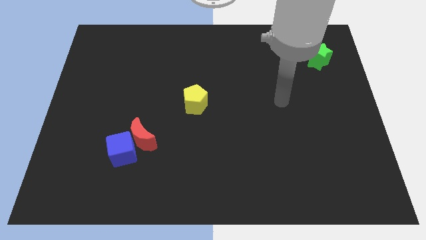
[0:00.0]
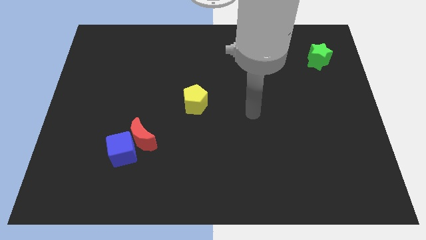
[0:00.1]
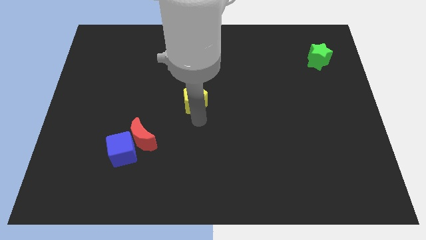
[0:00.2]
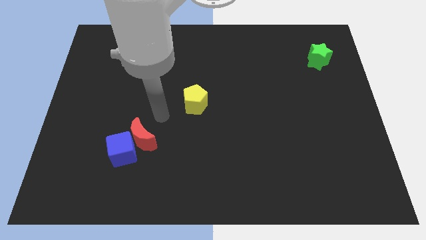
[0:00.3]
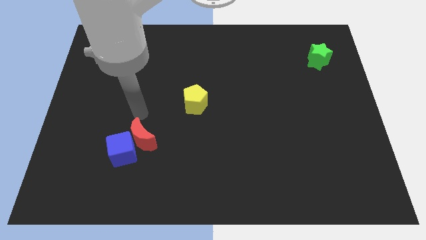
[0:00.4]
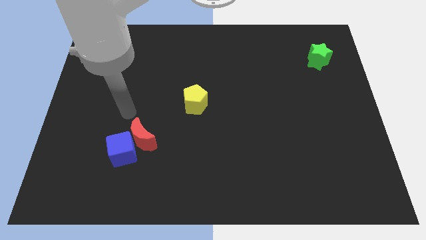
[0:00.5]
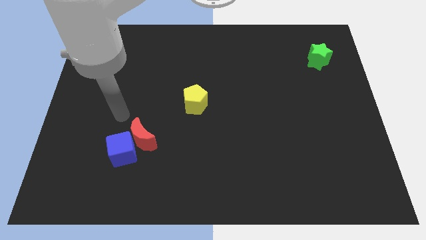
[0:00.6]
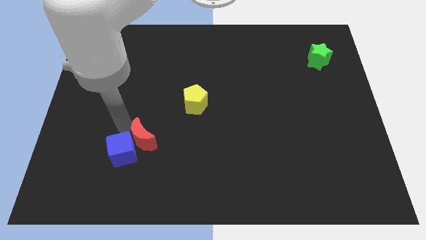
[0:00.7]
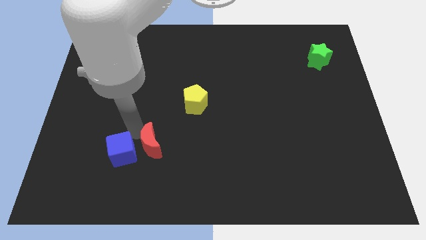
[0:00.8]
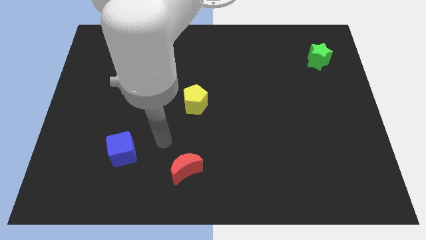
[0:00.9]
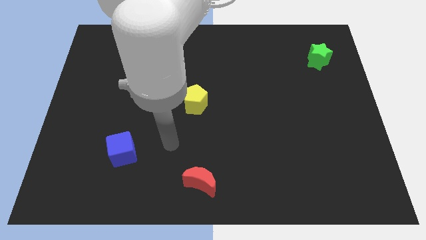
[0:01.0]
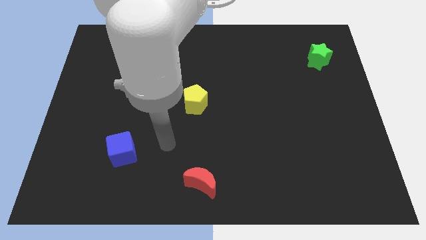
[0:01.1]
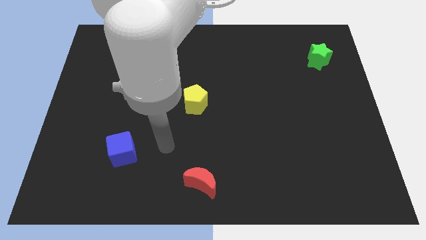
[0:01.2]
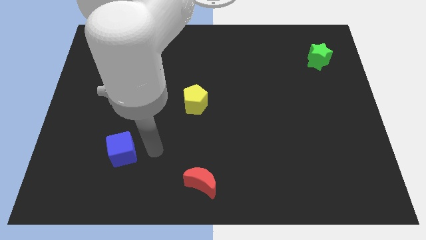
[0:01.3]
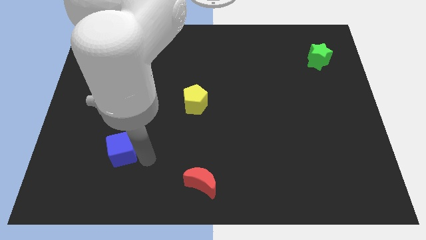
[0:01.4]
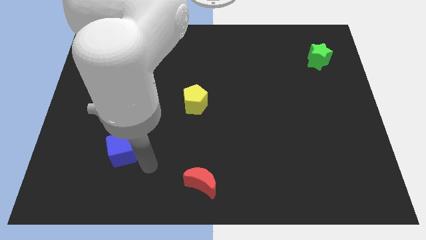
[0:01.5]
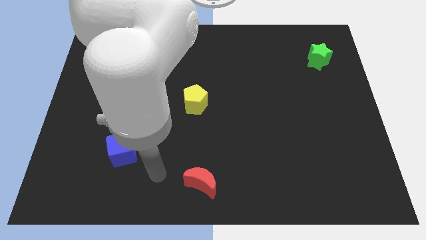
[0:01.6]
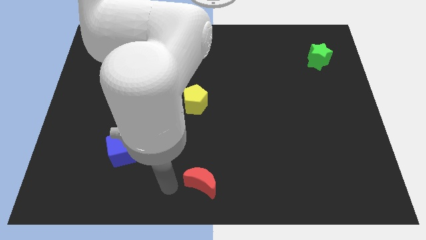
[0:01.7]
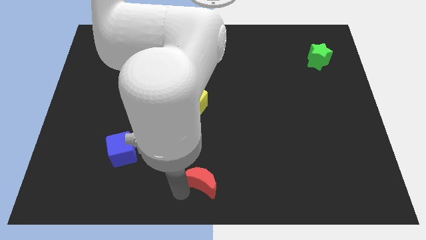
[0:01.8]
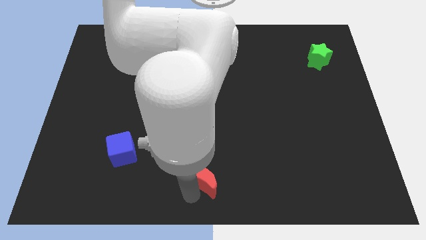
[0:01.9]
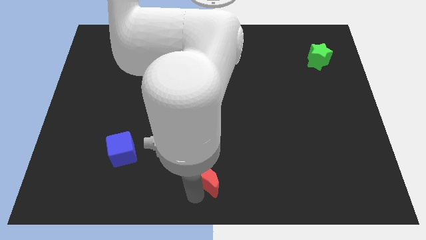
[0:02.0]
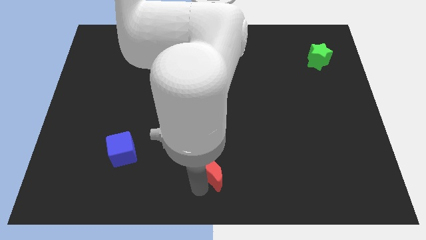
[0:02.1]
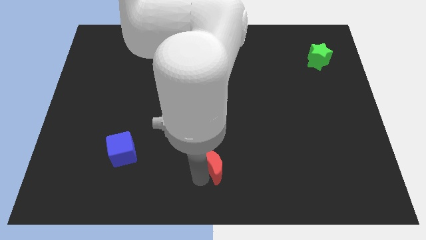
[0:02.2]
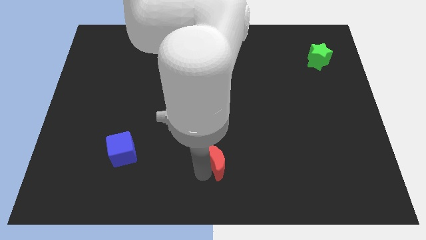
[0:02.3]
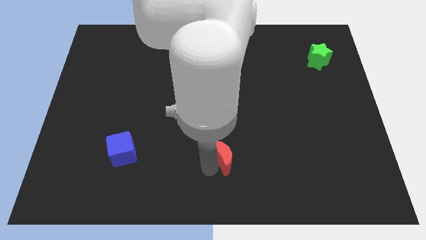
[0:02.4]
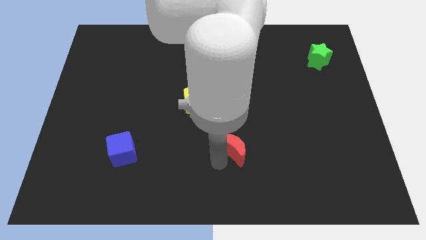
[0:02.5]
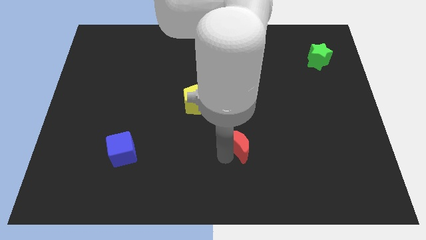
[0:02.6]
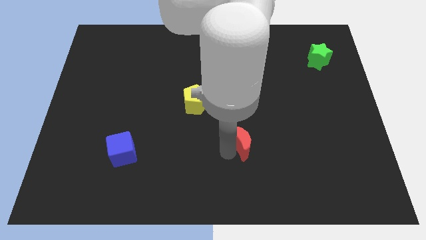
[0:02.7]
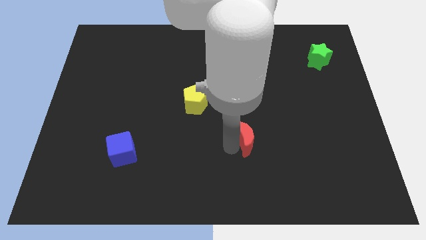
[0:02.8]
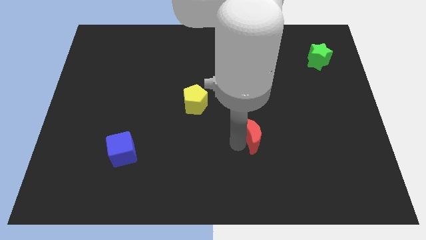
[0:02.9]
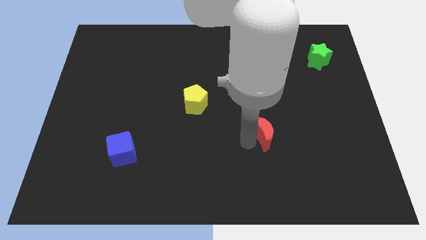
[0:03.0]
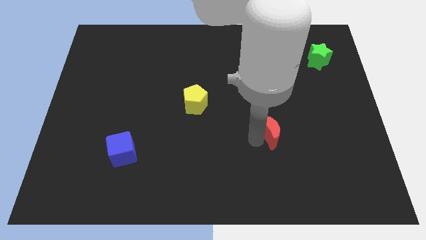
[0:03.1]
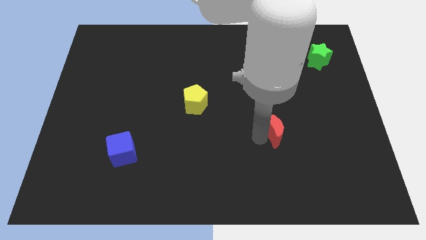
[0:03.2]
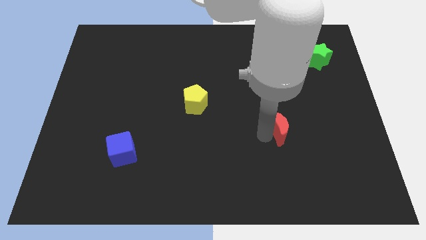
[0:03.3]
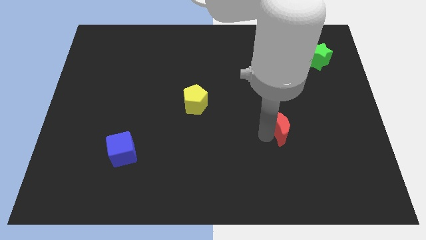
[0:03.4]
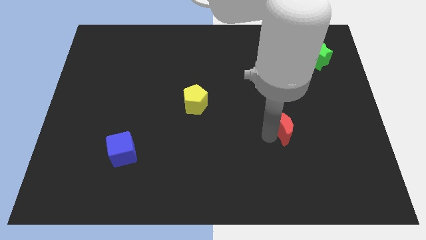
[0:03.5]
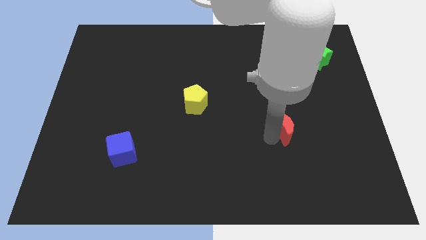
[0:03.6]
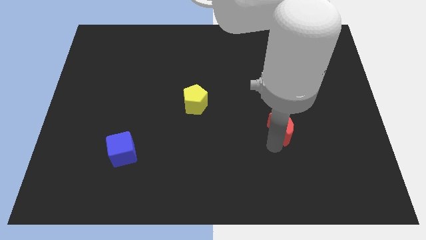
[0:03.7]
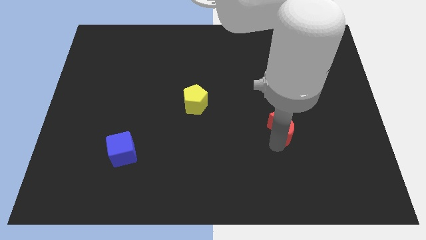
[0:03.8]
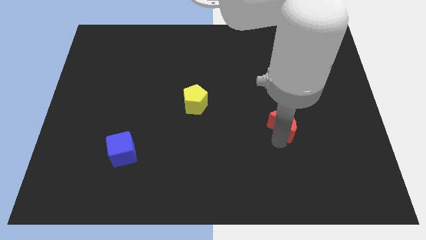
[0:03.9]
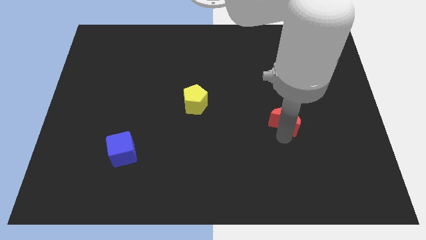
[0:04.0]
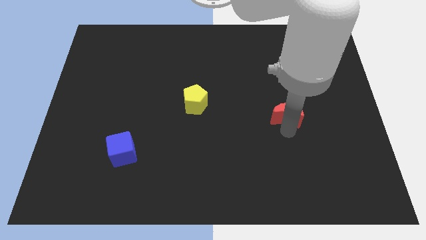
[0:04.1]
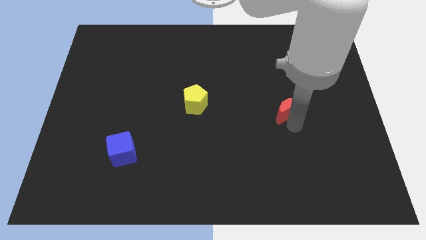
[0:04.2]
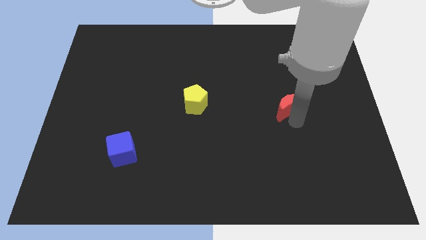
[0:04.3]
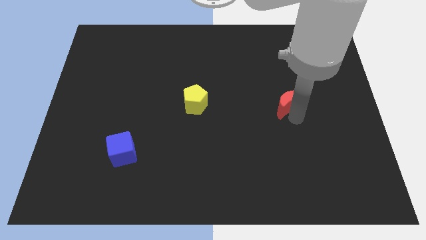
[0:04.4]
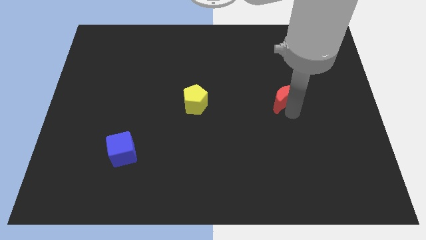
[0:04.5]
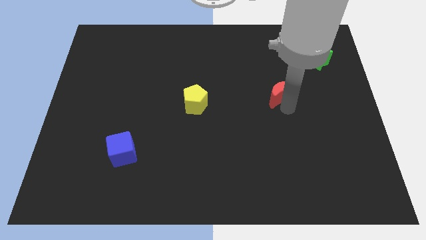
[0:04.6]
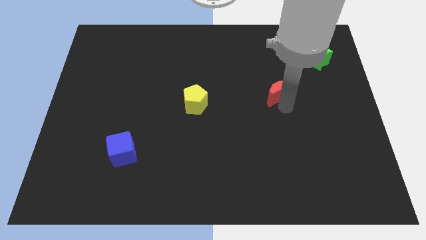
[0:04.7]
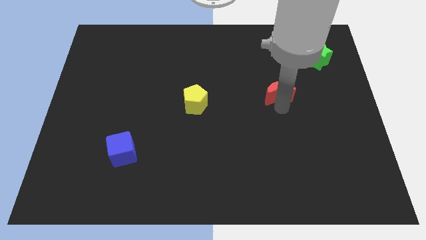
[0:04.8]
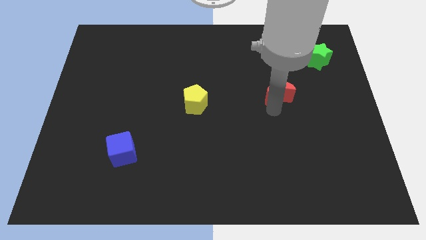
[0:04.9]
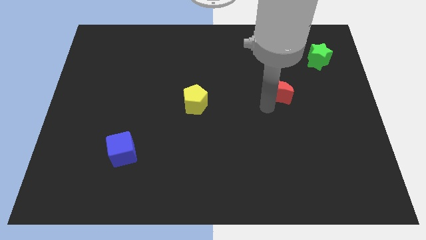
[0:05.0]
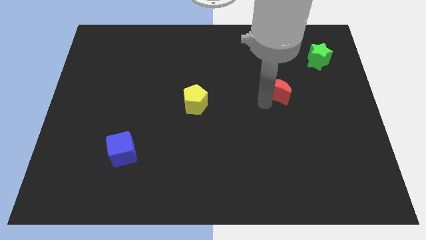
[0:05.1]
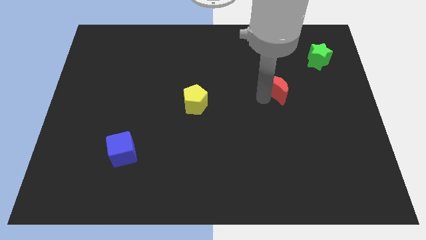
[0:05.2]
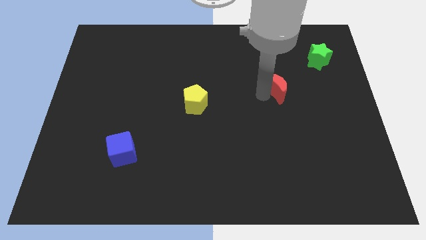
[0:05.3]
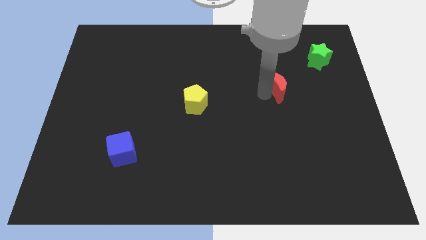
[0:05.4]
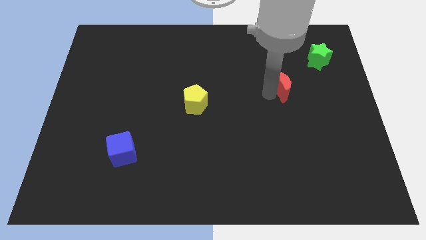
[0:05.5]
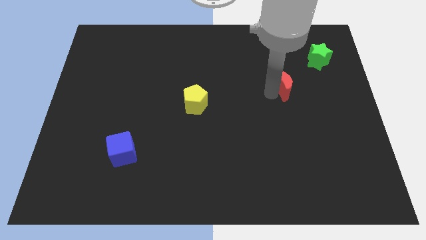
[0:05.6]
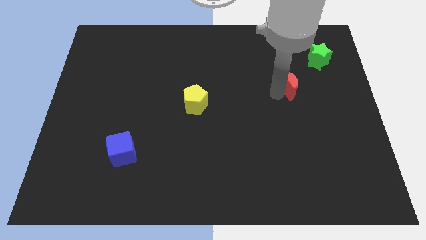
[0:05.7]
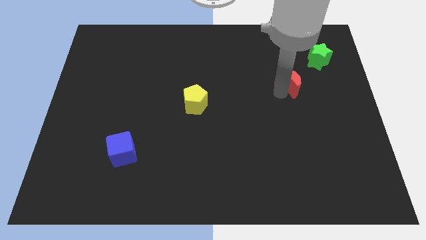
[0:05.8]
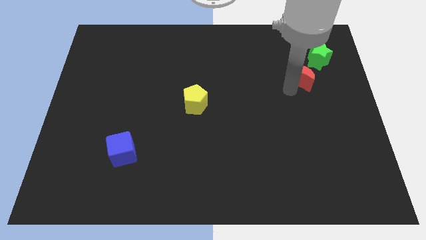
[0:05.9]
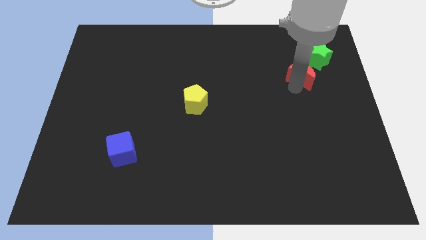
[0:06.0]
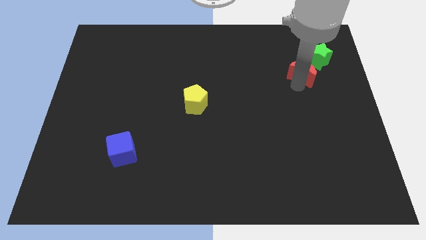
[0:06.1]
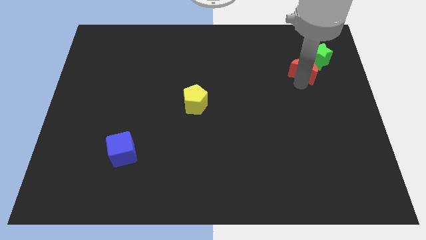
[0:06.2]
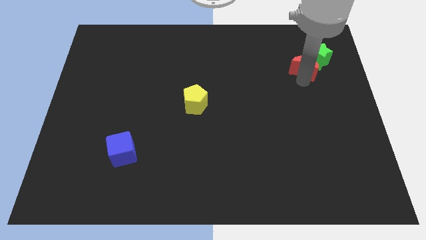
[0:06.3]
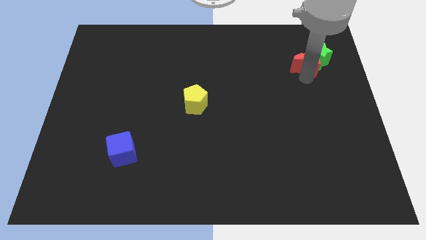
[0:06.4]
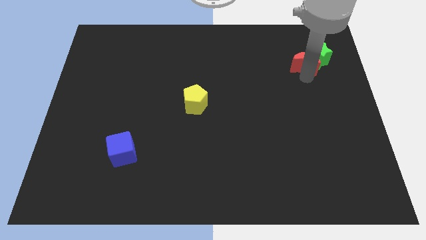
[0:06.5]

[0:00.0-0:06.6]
slide the moon next to the green block

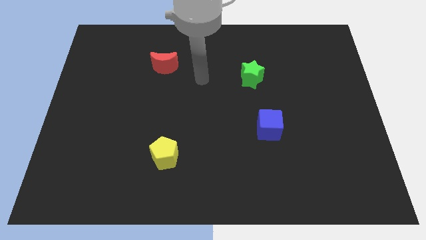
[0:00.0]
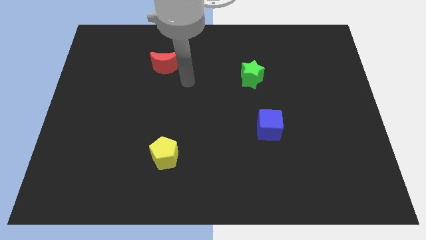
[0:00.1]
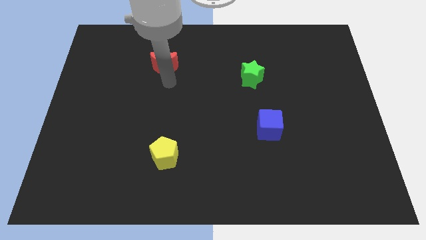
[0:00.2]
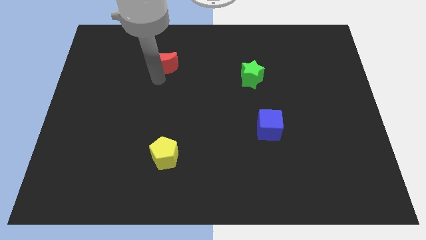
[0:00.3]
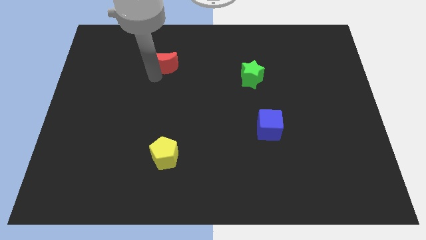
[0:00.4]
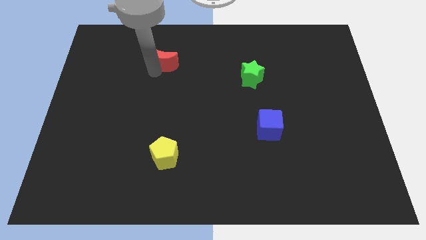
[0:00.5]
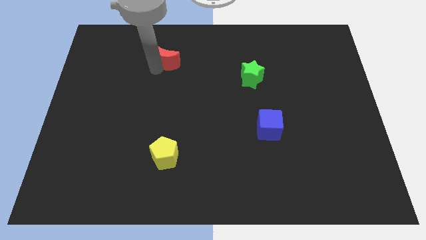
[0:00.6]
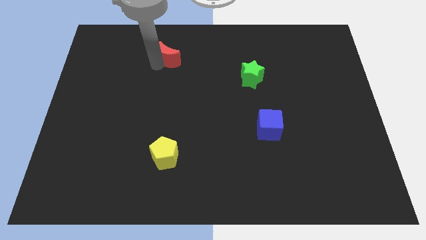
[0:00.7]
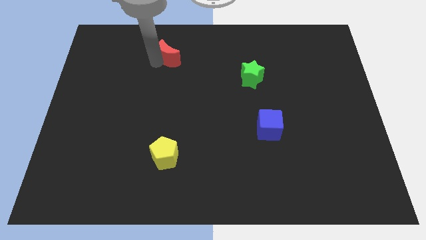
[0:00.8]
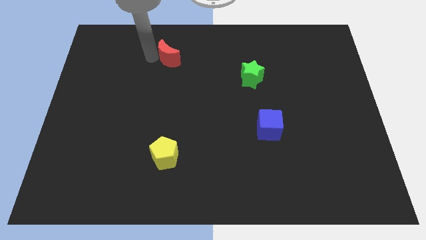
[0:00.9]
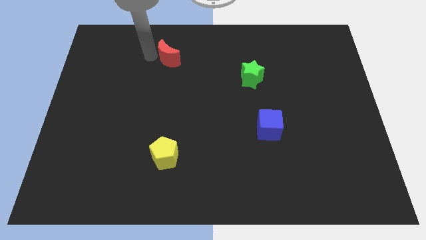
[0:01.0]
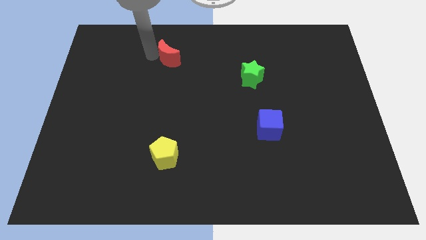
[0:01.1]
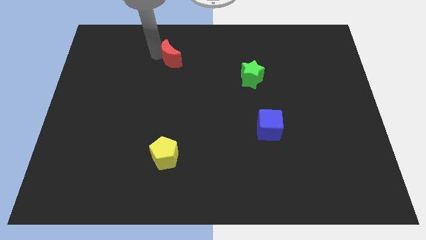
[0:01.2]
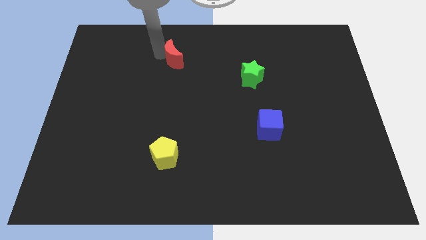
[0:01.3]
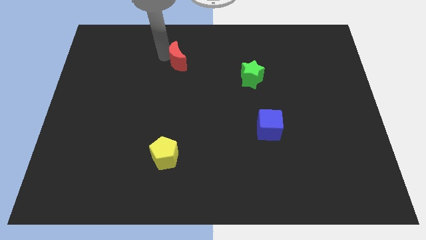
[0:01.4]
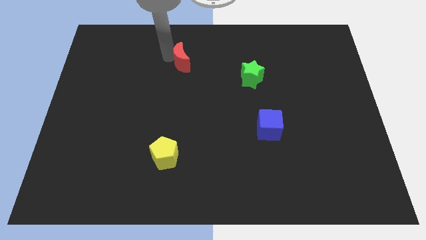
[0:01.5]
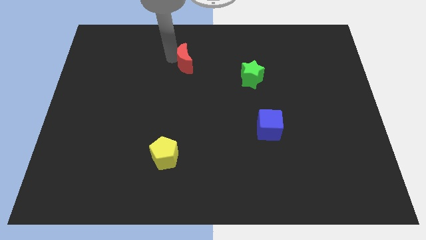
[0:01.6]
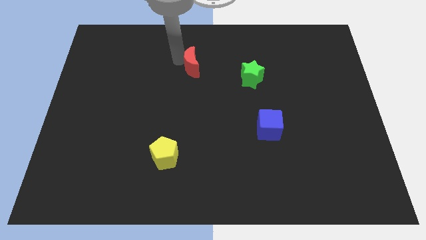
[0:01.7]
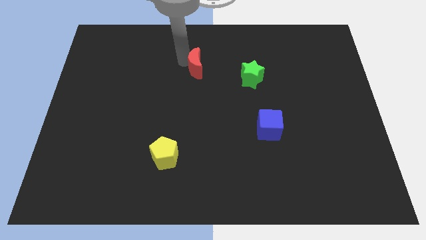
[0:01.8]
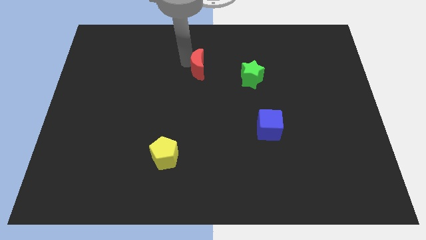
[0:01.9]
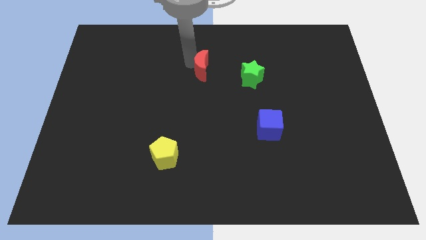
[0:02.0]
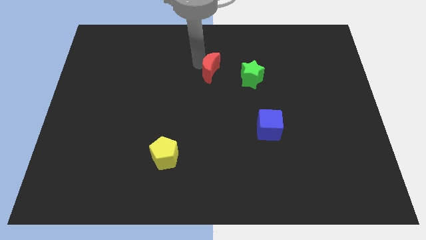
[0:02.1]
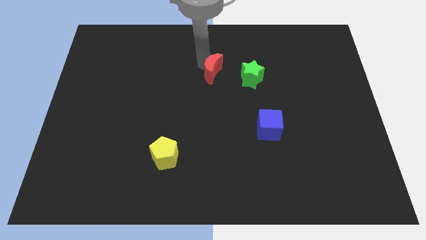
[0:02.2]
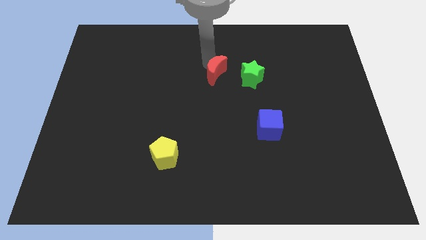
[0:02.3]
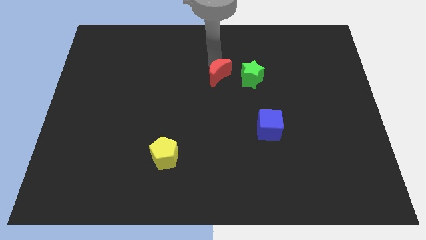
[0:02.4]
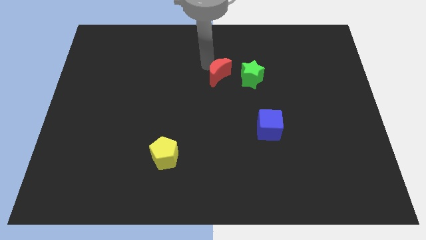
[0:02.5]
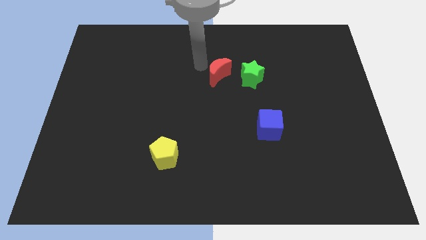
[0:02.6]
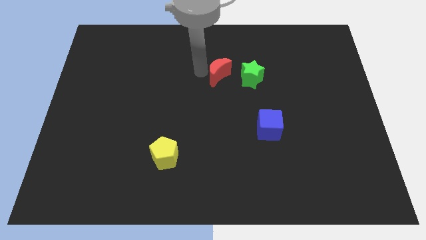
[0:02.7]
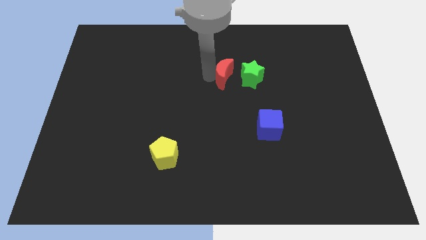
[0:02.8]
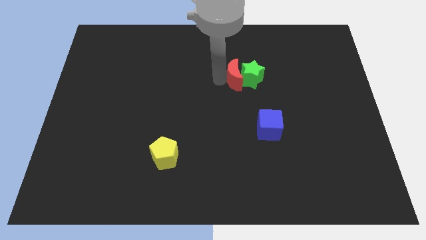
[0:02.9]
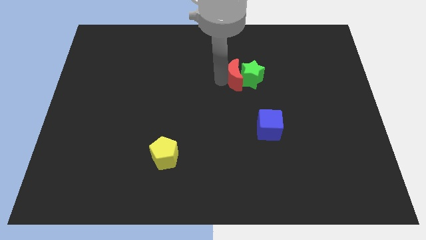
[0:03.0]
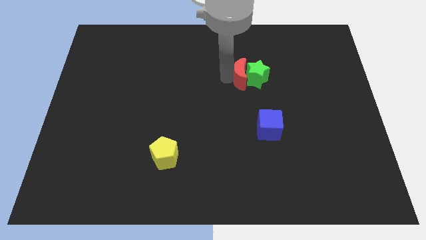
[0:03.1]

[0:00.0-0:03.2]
put the red moon next to the star
